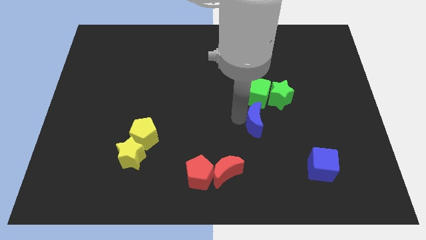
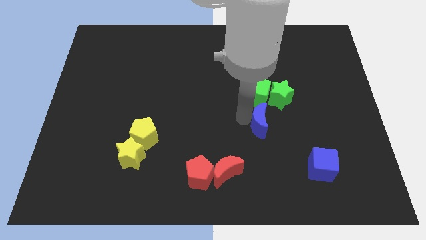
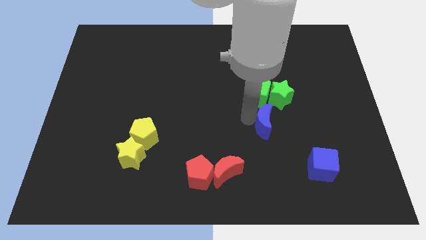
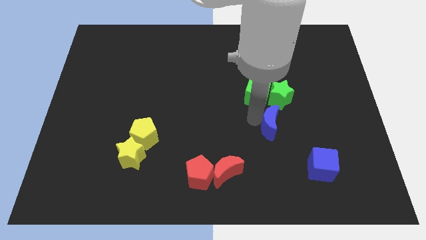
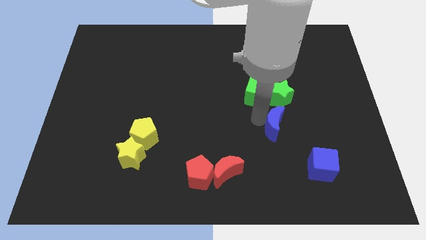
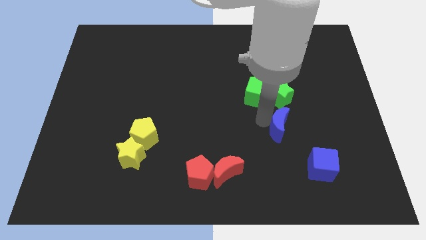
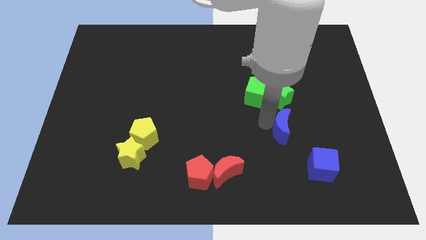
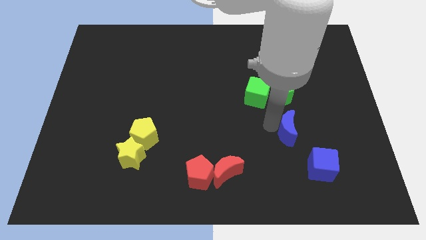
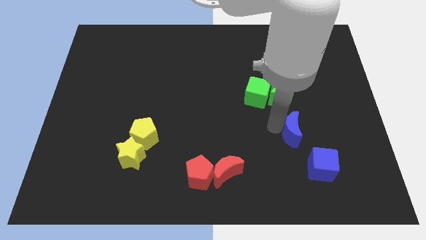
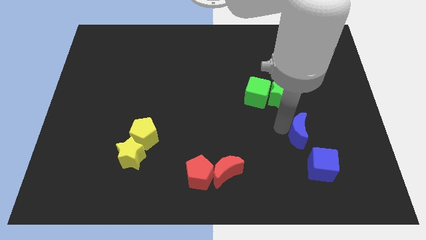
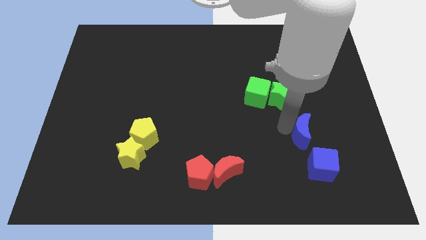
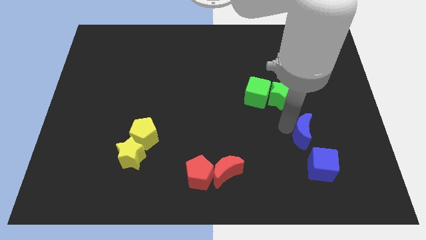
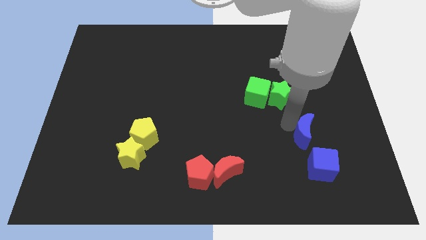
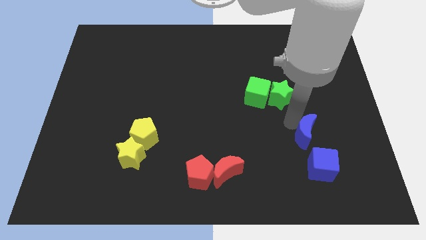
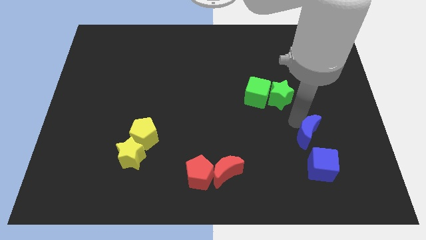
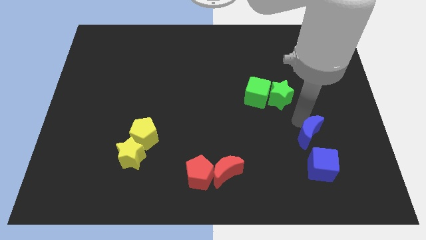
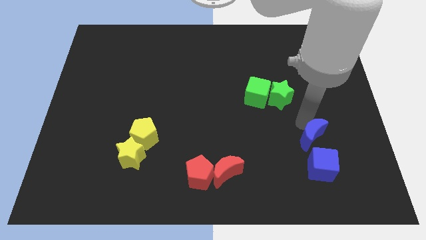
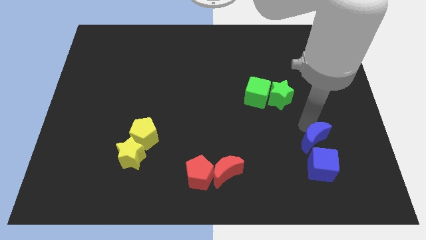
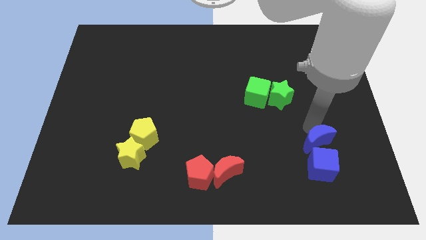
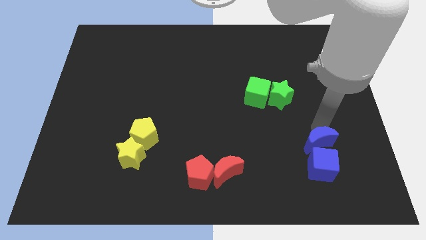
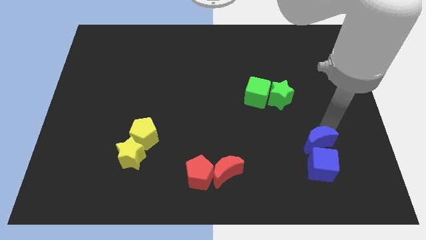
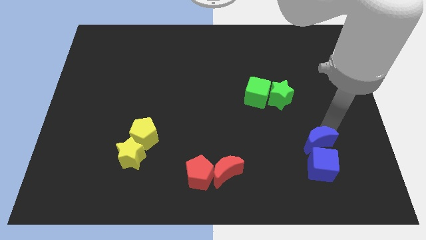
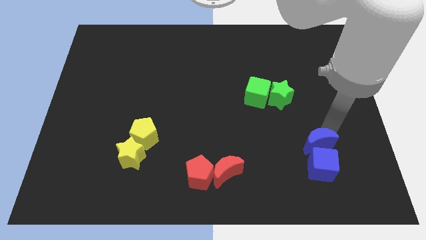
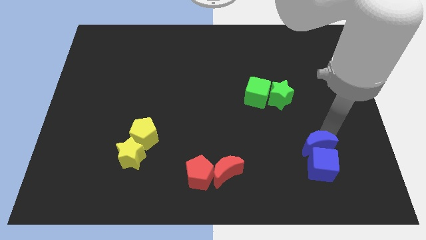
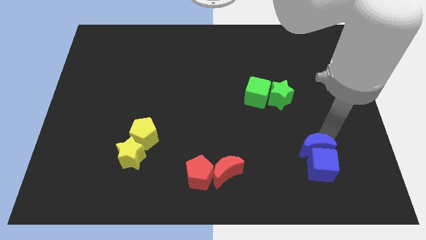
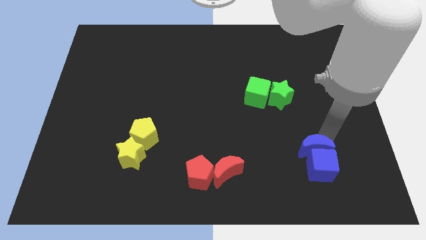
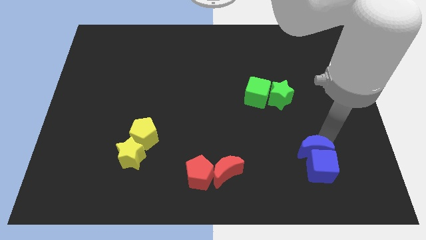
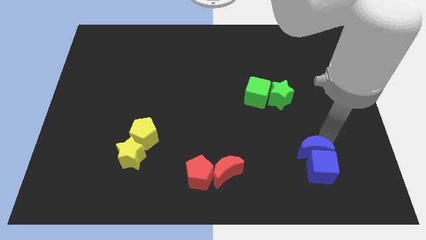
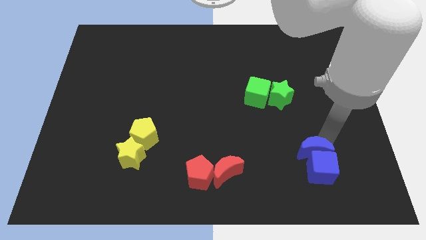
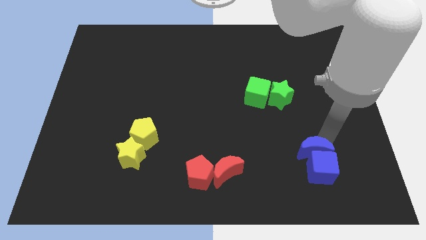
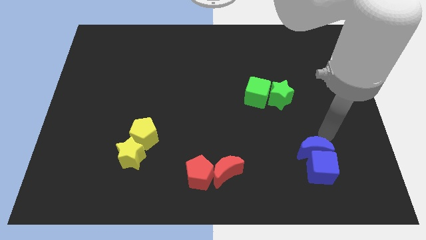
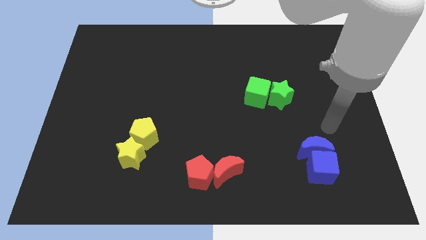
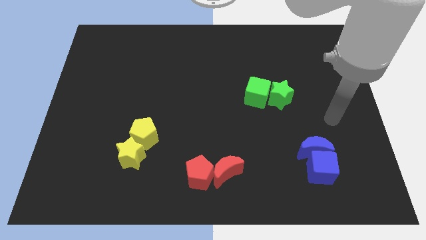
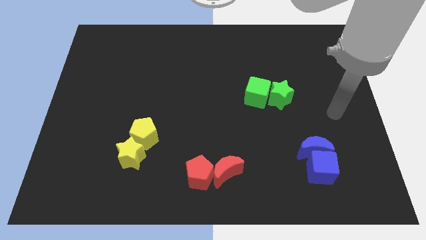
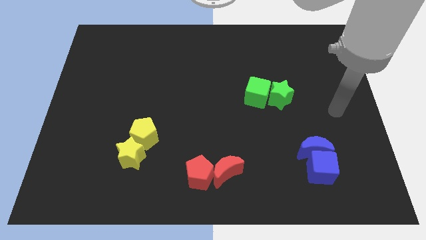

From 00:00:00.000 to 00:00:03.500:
push the blue moon into the blue cube

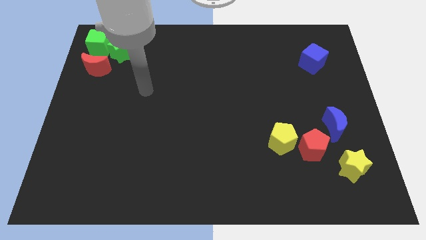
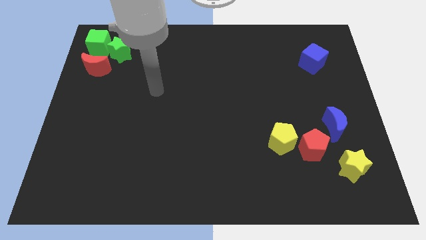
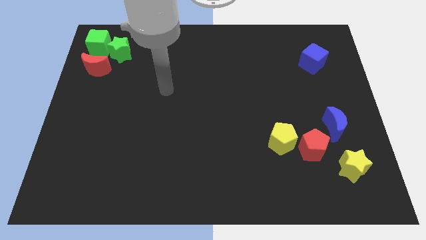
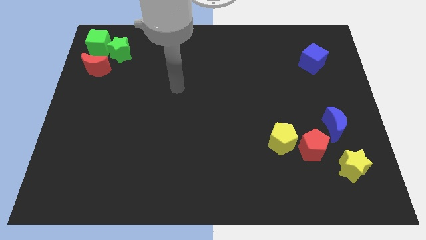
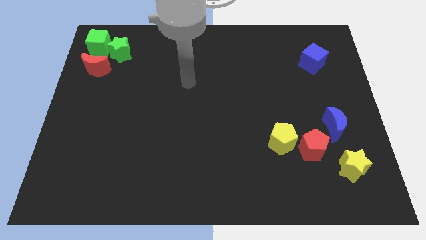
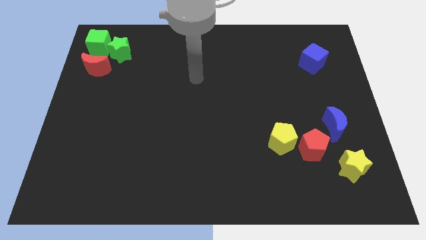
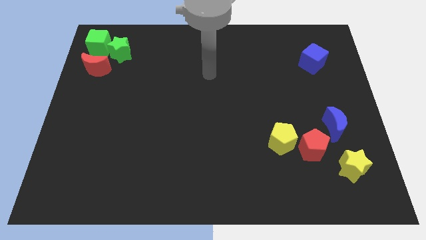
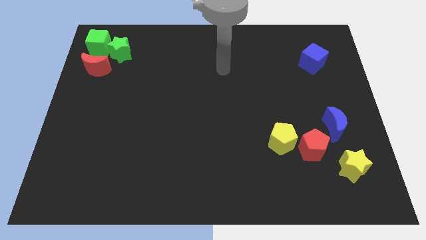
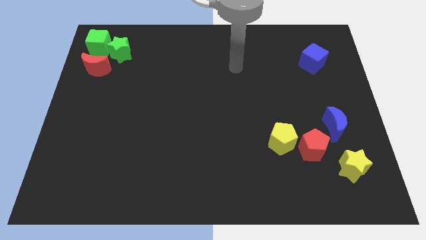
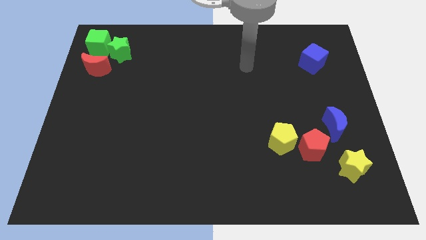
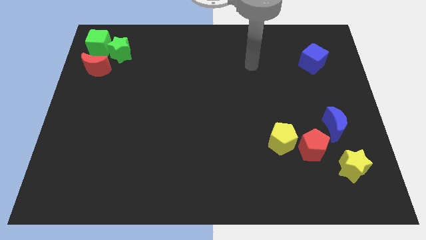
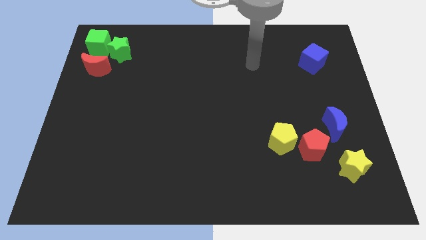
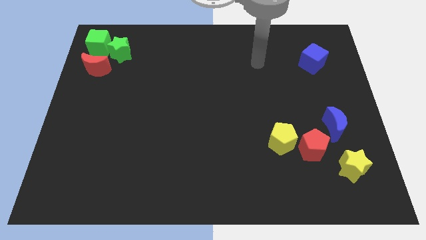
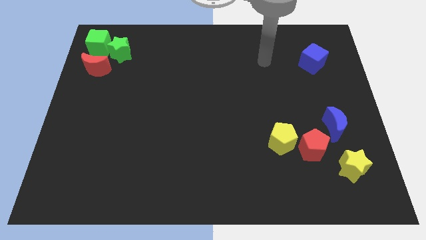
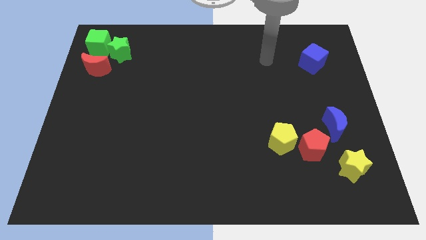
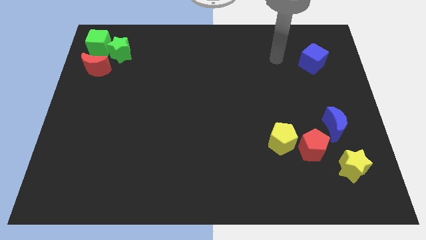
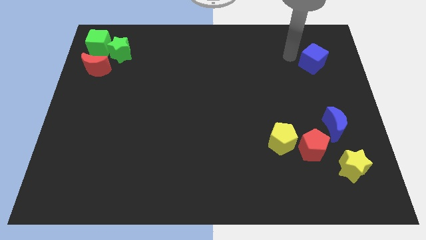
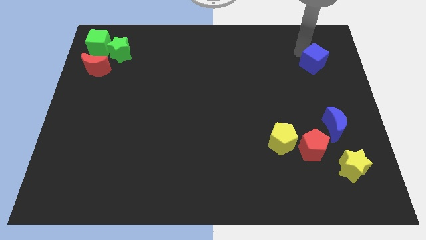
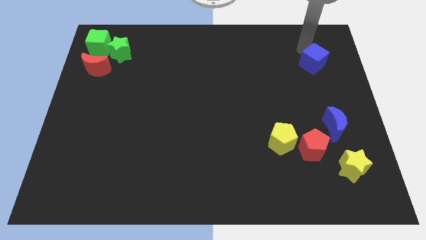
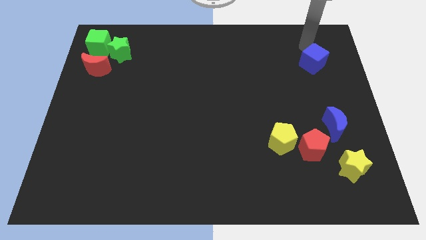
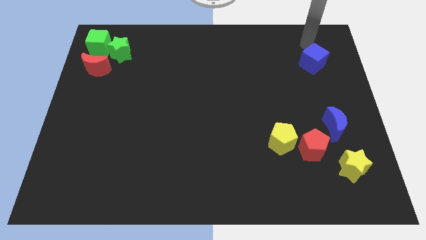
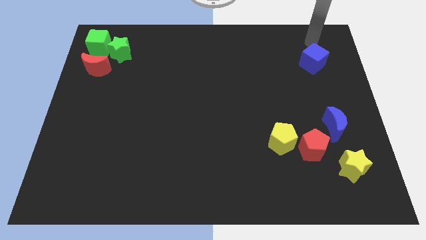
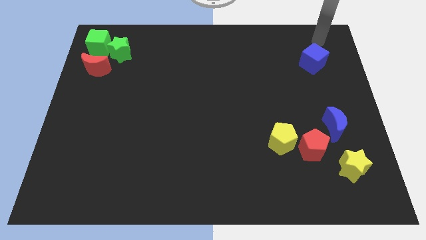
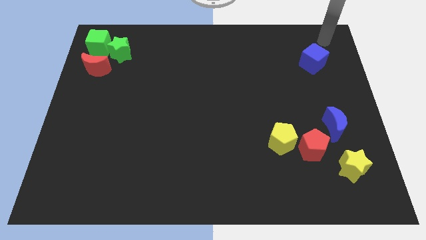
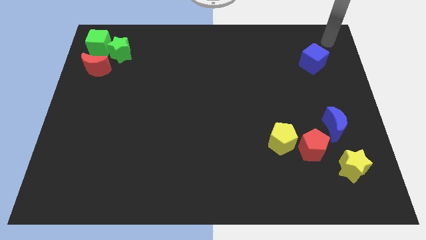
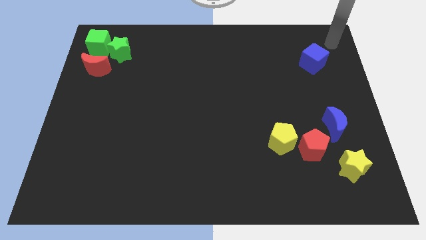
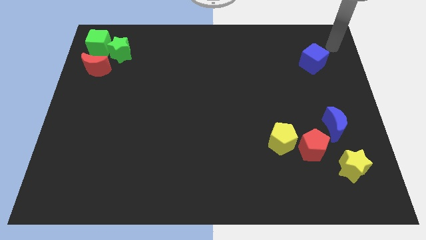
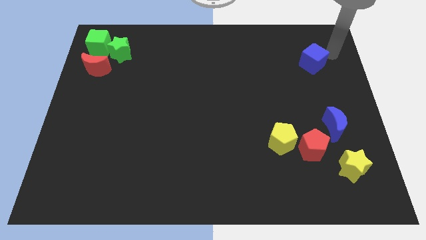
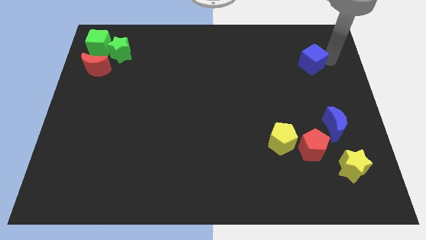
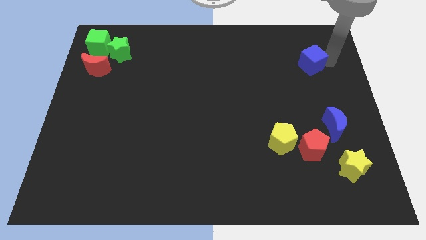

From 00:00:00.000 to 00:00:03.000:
move the blue object slightly

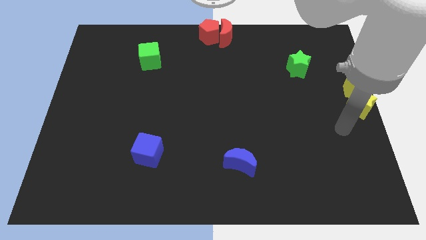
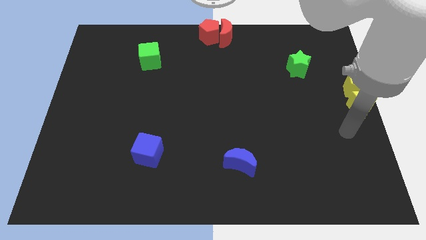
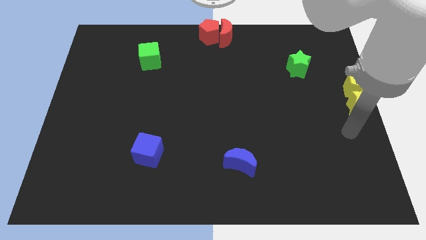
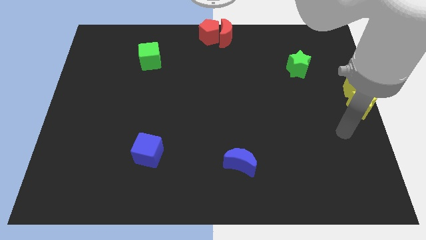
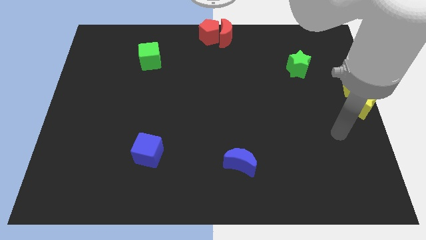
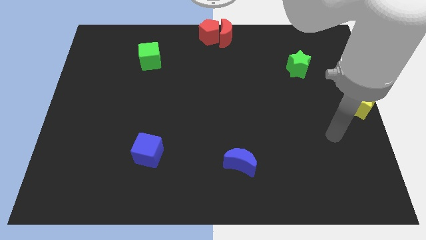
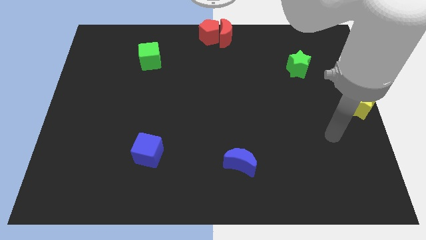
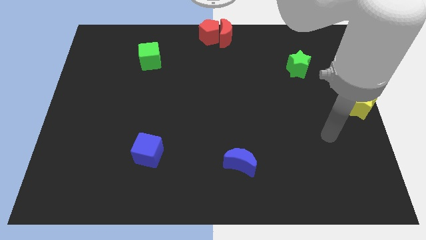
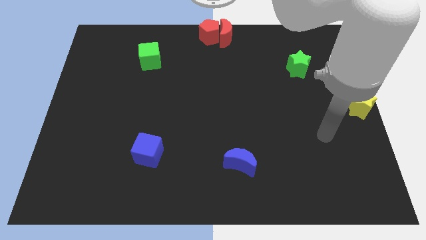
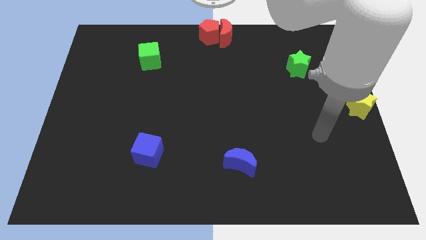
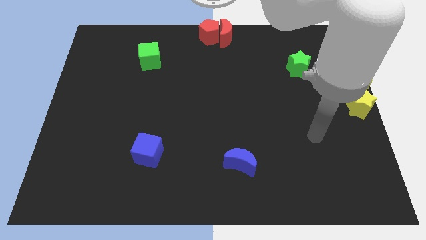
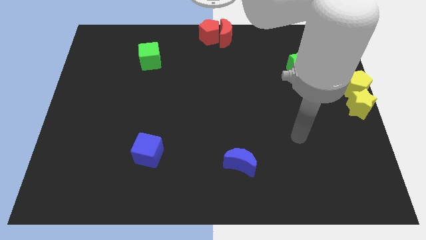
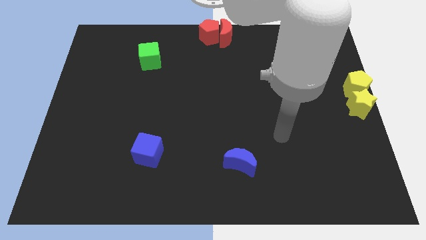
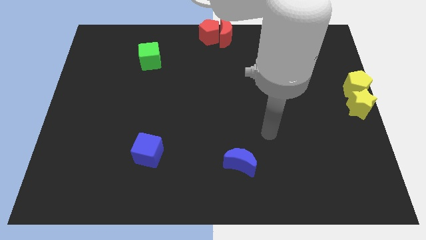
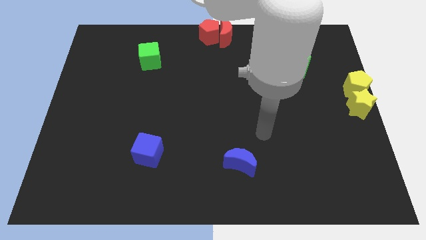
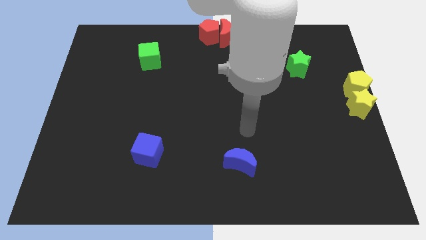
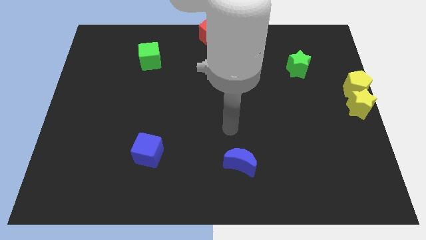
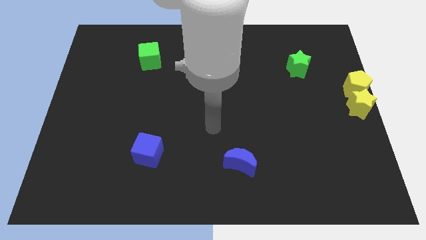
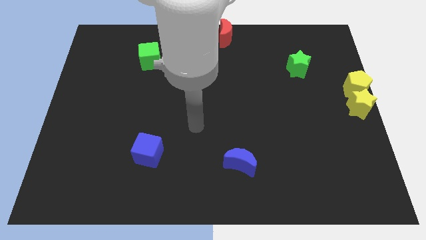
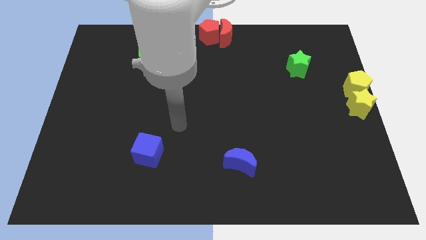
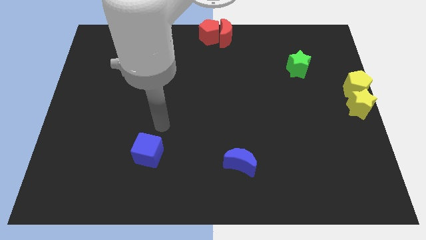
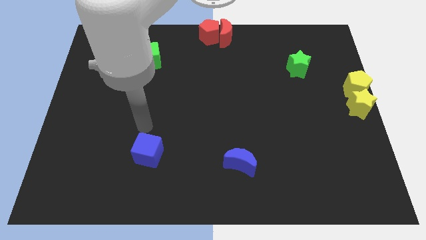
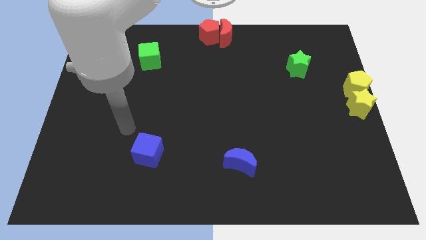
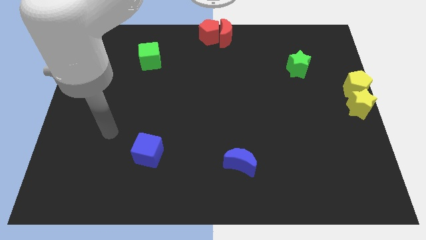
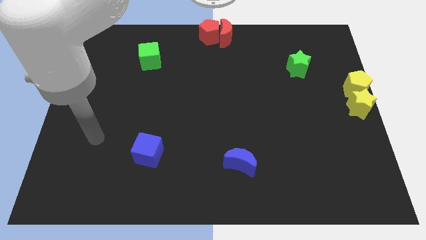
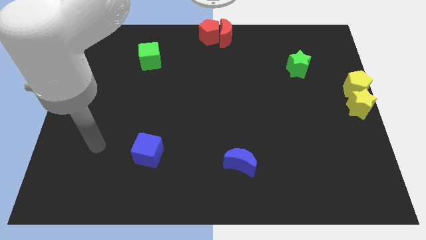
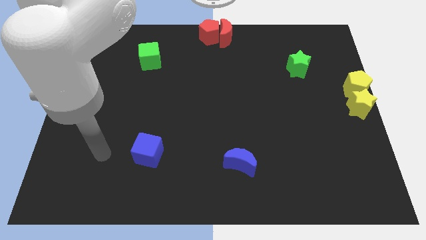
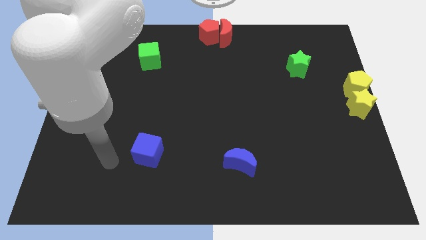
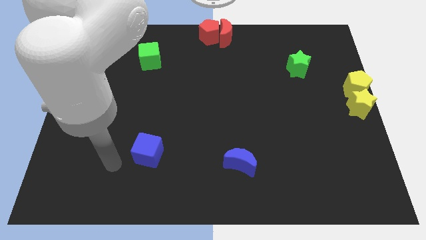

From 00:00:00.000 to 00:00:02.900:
point the arm to the bottom left of the blue cube
